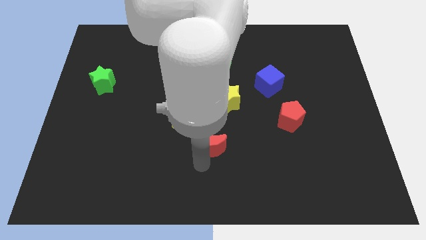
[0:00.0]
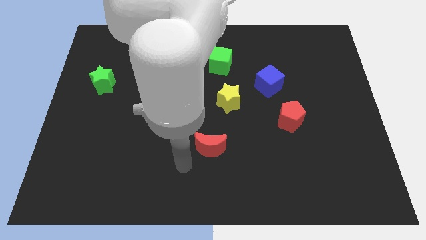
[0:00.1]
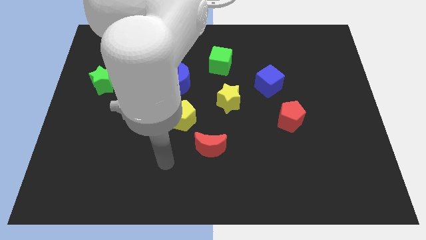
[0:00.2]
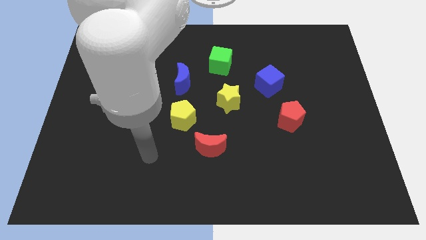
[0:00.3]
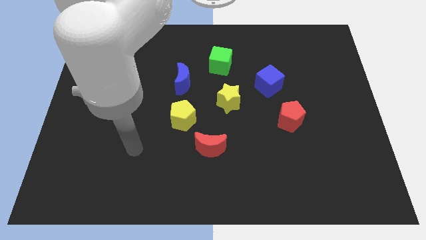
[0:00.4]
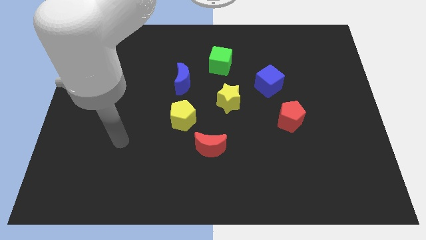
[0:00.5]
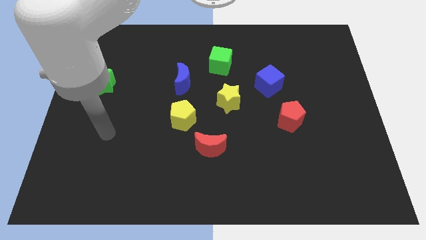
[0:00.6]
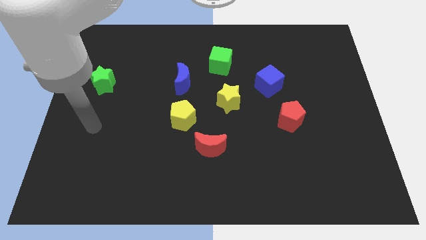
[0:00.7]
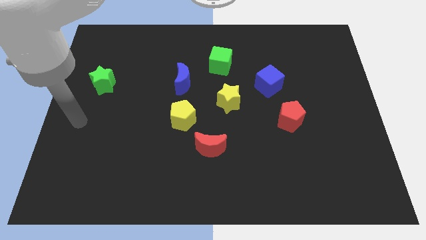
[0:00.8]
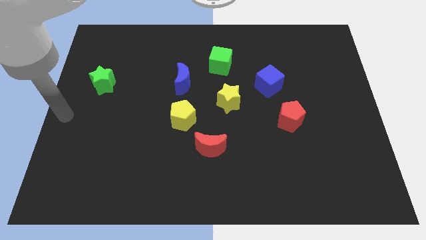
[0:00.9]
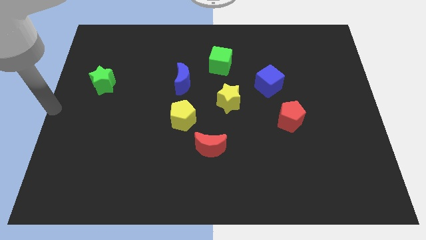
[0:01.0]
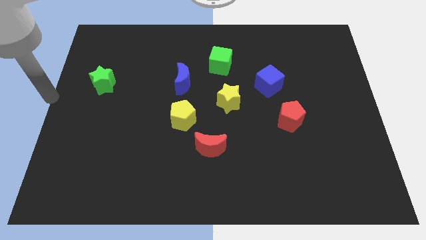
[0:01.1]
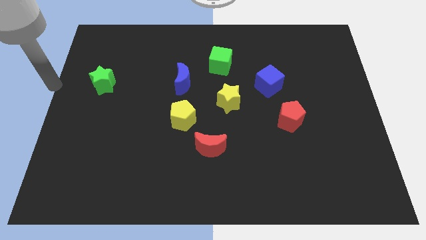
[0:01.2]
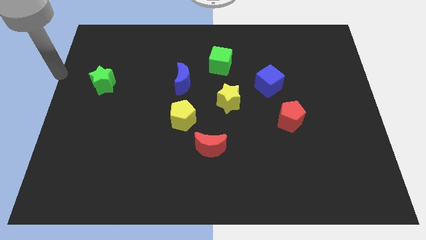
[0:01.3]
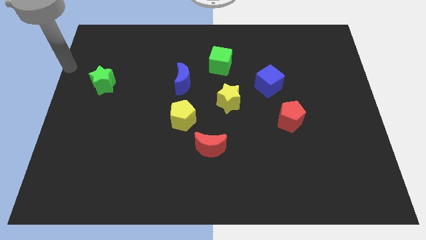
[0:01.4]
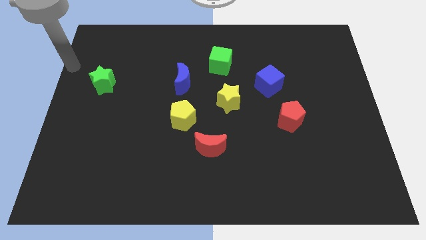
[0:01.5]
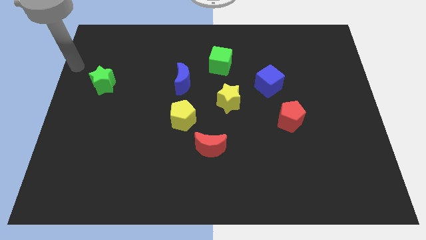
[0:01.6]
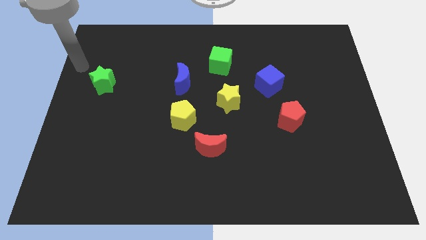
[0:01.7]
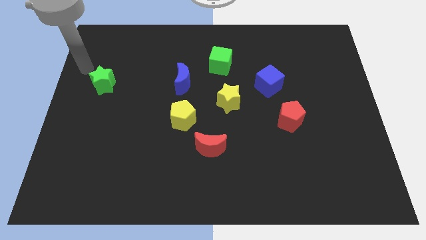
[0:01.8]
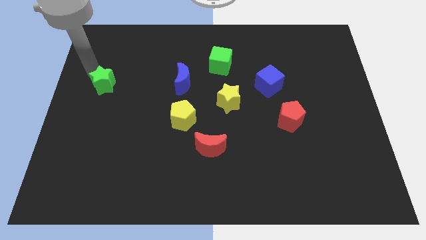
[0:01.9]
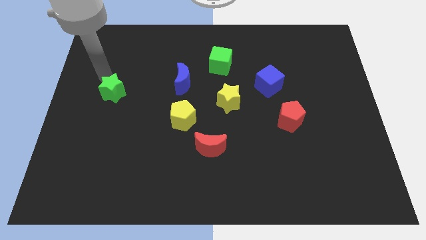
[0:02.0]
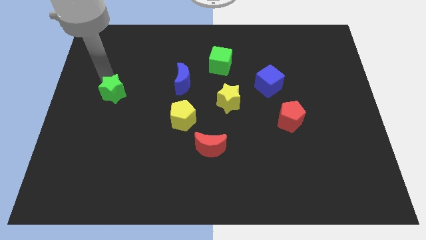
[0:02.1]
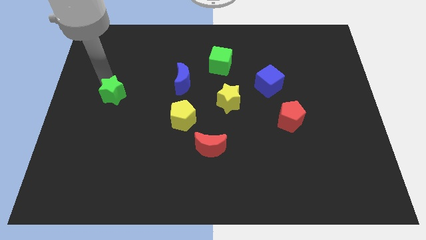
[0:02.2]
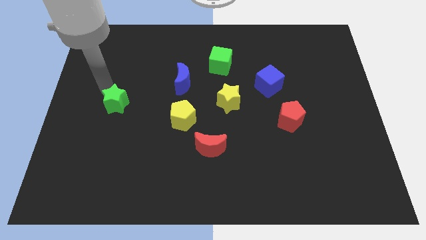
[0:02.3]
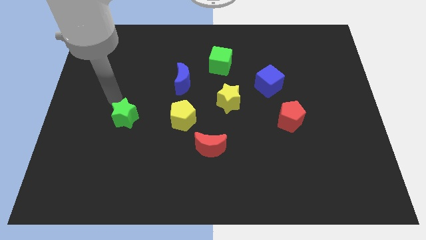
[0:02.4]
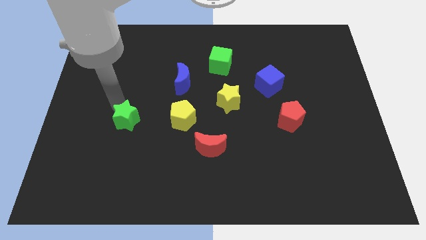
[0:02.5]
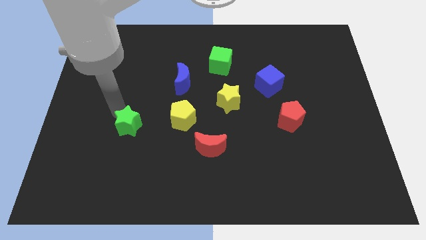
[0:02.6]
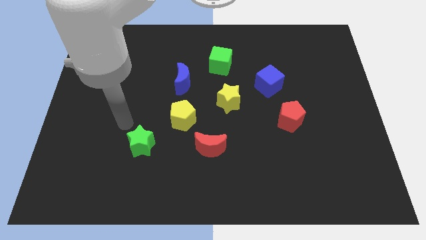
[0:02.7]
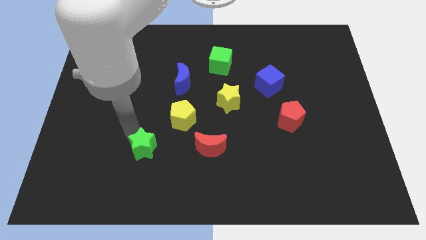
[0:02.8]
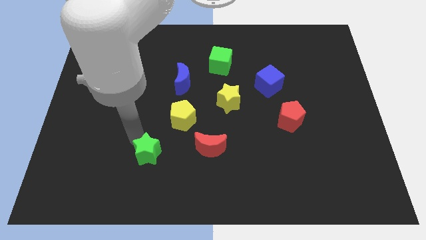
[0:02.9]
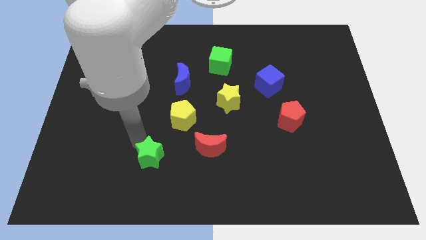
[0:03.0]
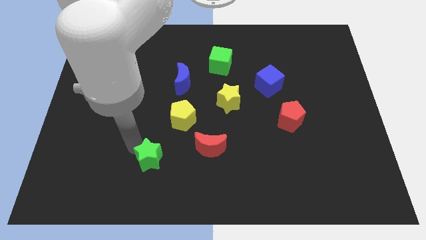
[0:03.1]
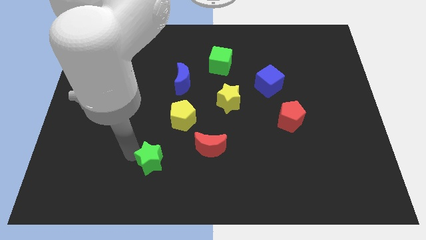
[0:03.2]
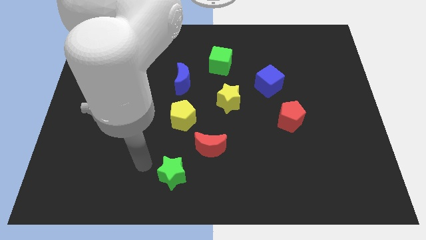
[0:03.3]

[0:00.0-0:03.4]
place the green star bottom left to the yellow pentagon

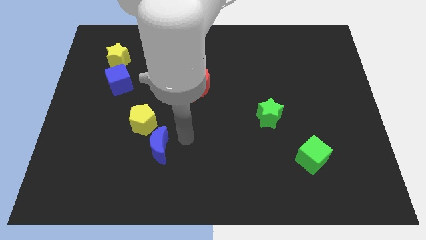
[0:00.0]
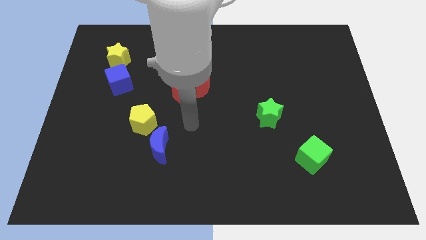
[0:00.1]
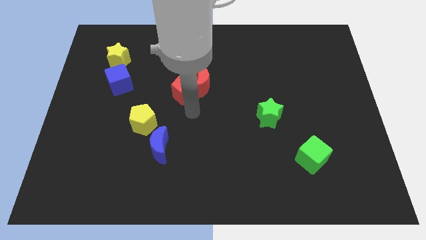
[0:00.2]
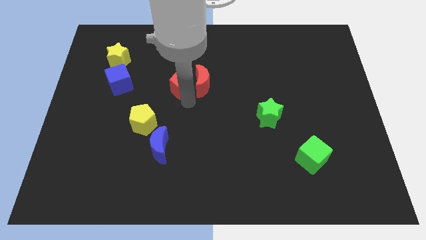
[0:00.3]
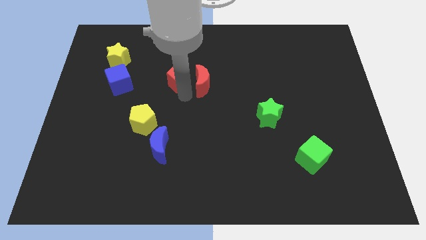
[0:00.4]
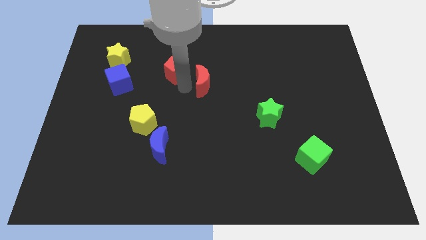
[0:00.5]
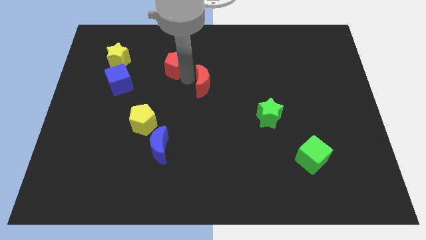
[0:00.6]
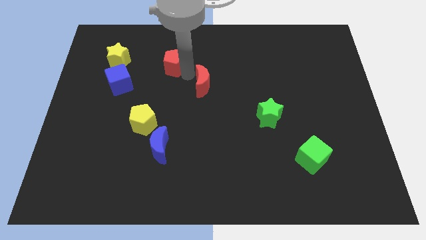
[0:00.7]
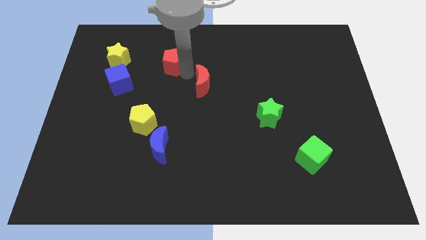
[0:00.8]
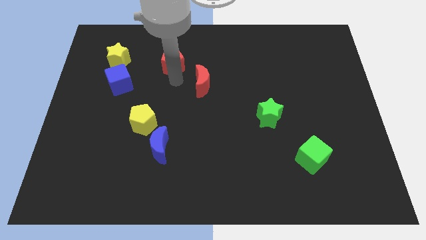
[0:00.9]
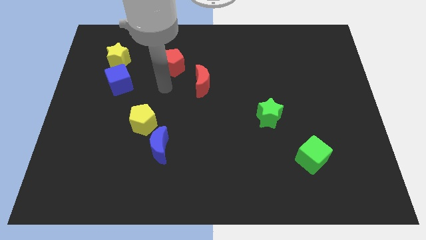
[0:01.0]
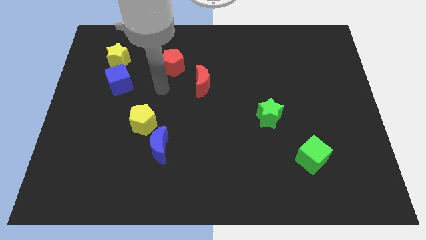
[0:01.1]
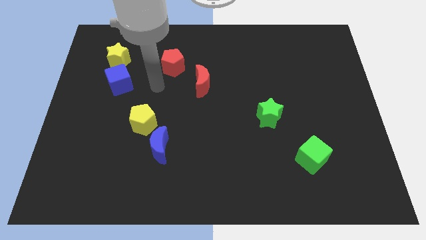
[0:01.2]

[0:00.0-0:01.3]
push red pentagon diagonally top left to the red moon

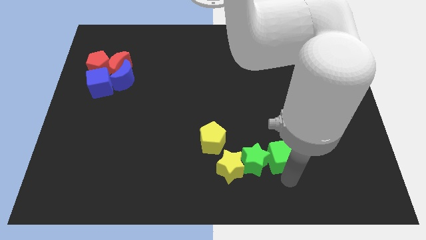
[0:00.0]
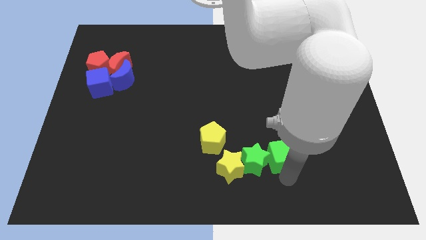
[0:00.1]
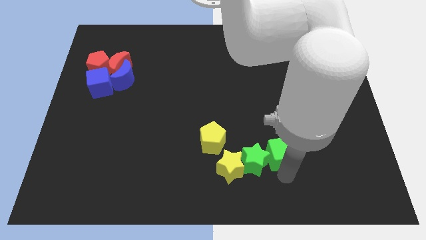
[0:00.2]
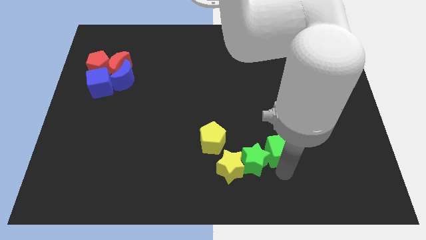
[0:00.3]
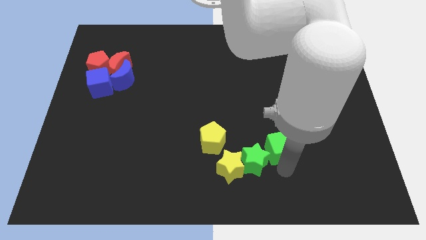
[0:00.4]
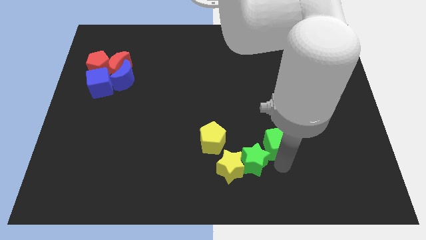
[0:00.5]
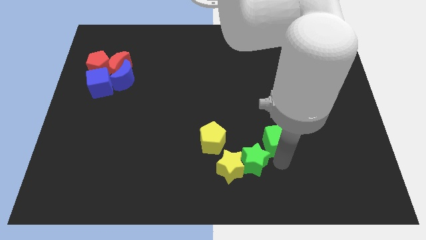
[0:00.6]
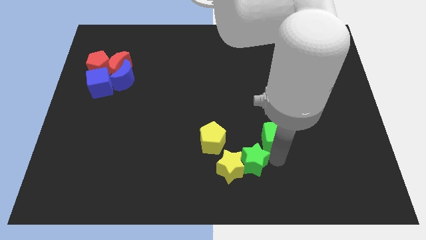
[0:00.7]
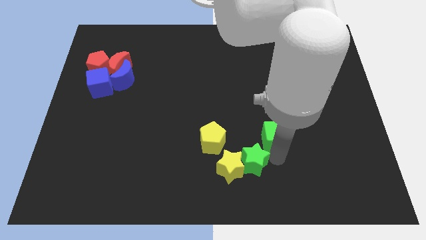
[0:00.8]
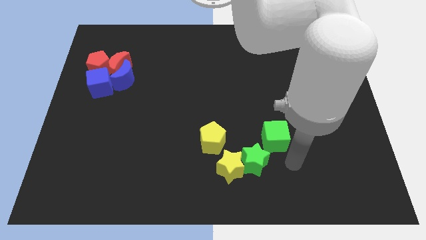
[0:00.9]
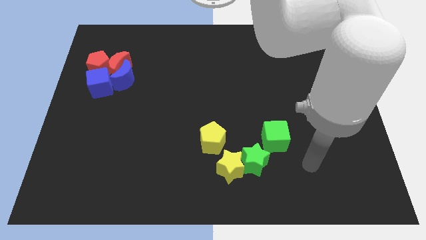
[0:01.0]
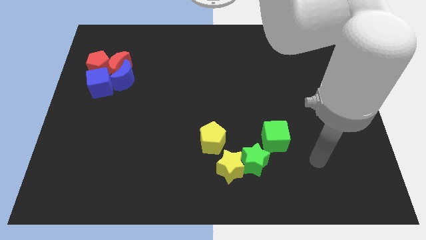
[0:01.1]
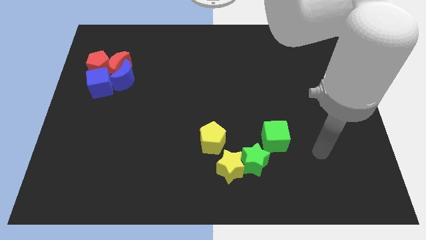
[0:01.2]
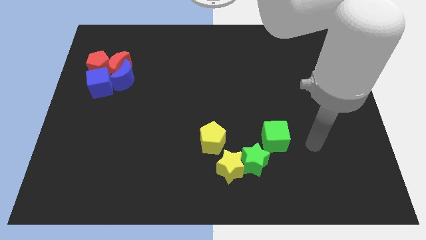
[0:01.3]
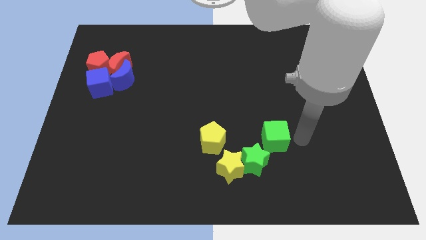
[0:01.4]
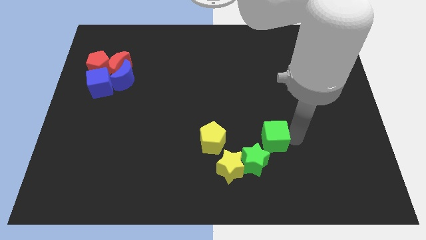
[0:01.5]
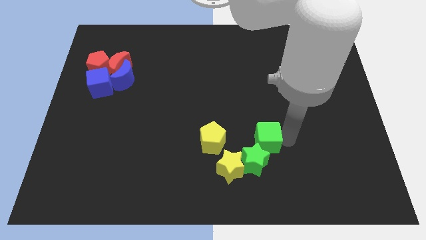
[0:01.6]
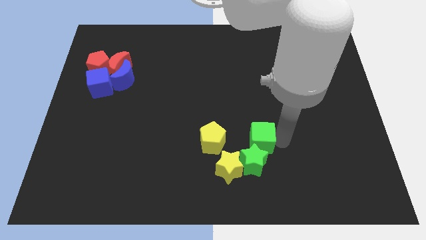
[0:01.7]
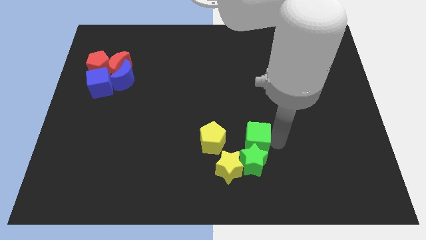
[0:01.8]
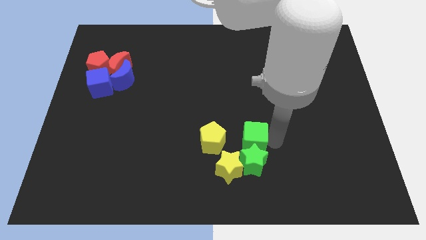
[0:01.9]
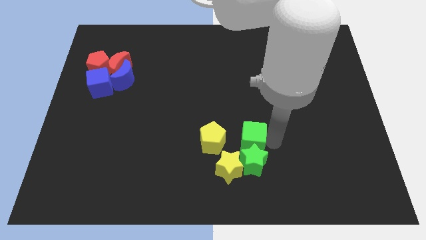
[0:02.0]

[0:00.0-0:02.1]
push green cube above green star

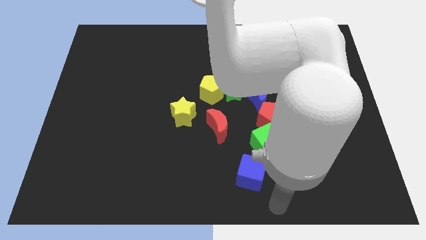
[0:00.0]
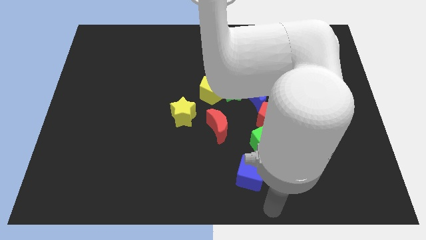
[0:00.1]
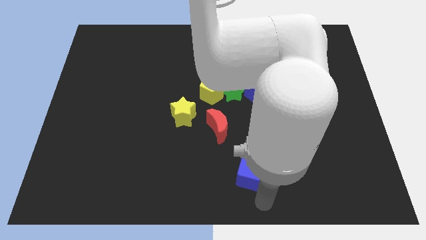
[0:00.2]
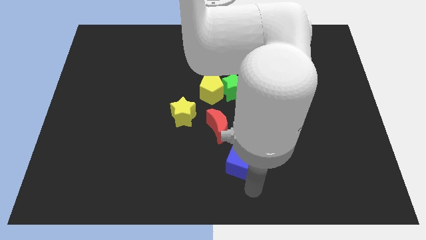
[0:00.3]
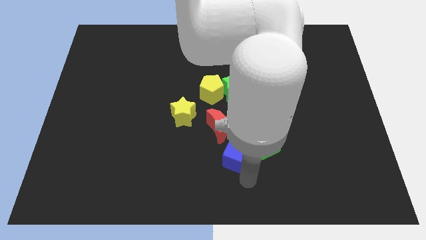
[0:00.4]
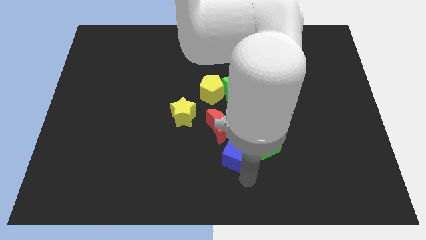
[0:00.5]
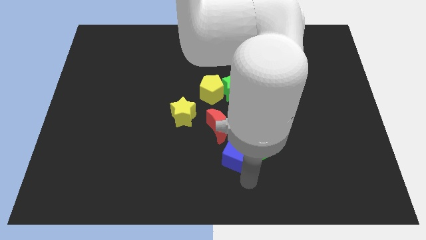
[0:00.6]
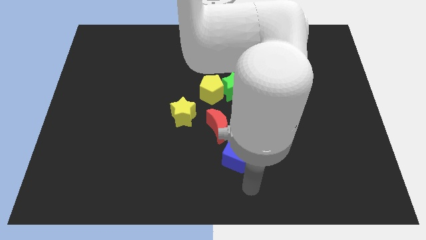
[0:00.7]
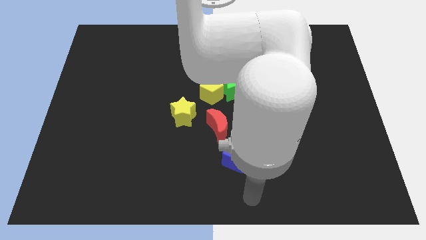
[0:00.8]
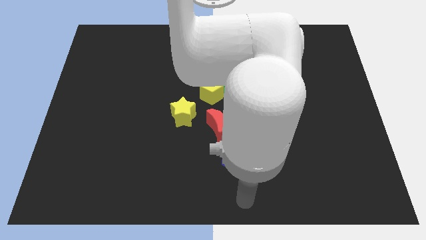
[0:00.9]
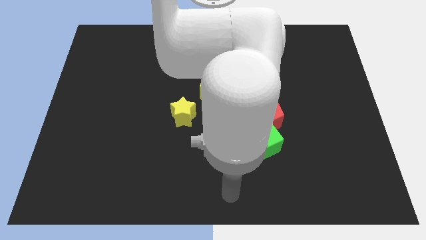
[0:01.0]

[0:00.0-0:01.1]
push the blue cube to the left of the green cube

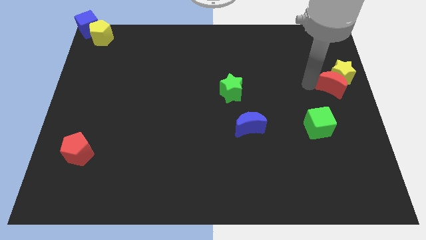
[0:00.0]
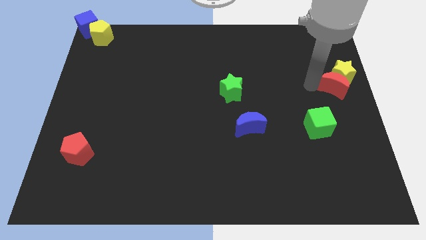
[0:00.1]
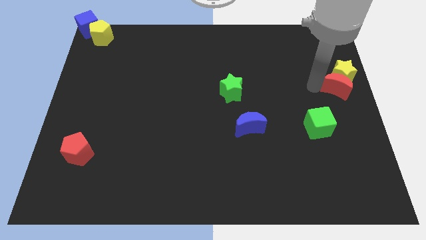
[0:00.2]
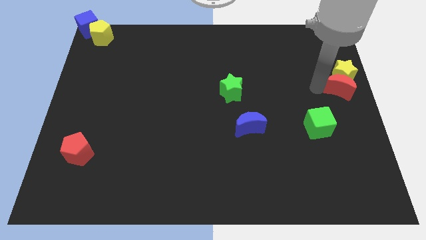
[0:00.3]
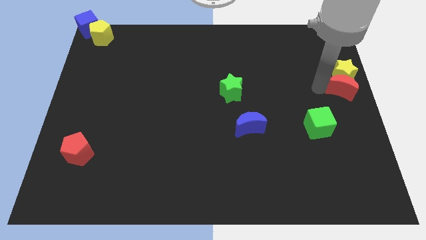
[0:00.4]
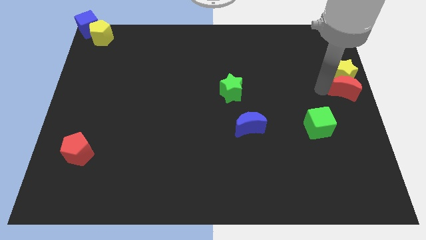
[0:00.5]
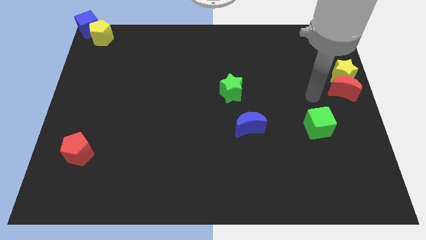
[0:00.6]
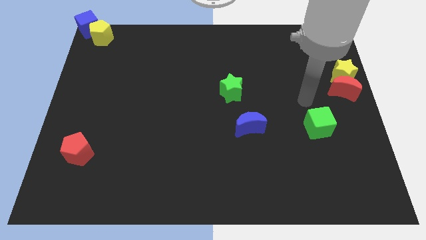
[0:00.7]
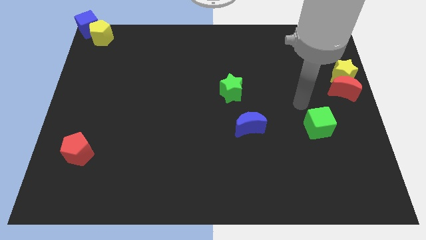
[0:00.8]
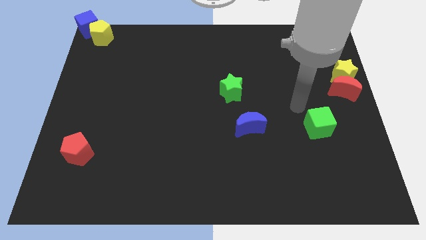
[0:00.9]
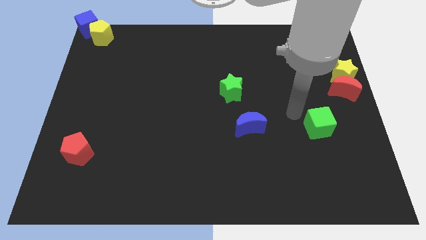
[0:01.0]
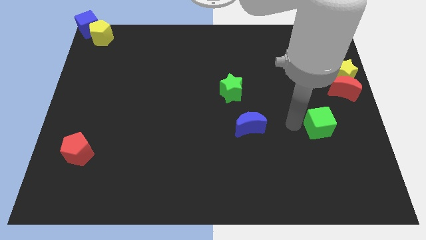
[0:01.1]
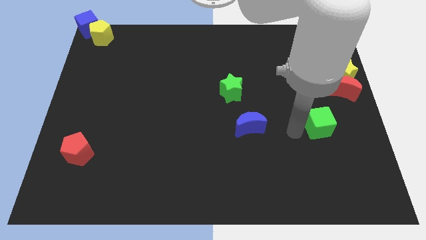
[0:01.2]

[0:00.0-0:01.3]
place the red crescent below the yellow star
